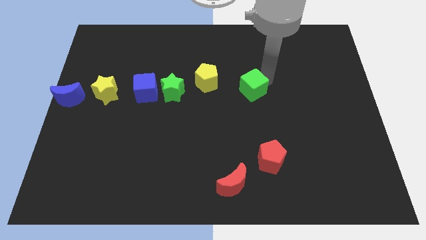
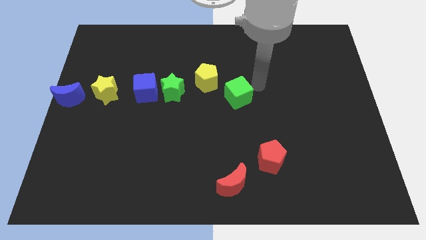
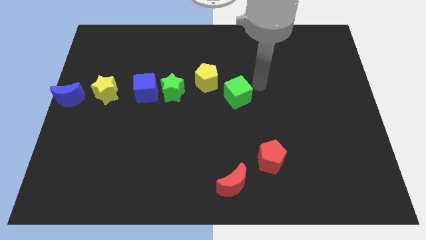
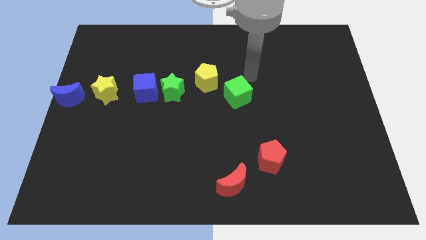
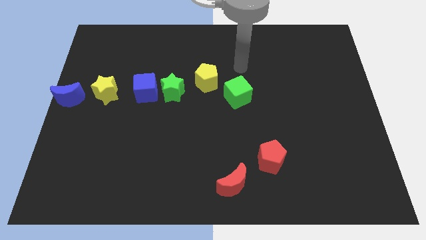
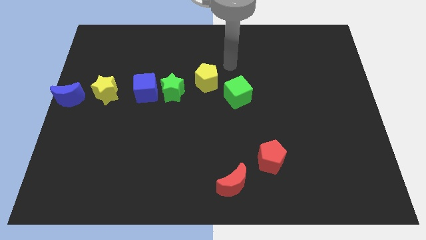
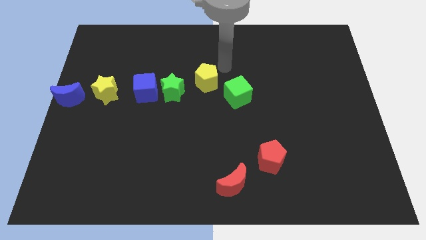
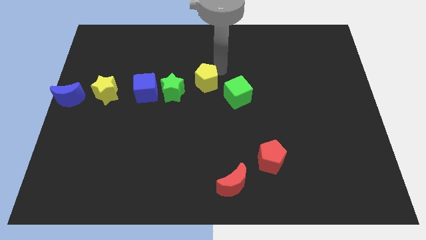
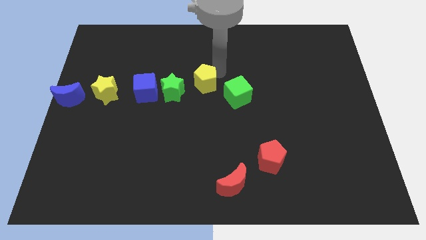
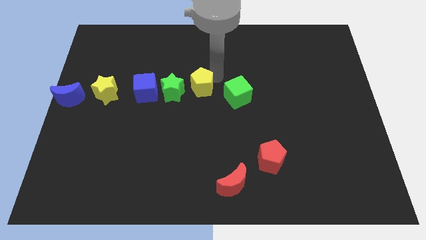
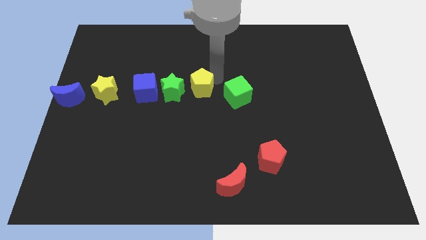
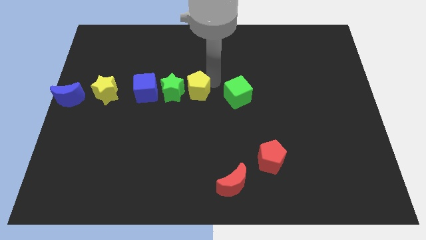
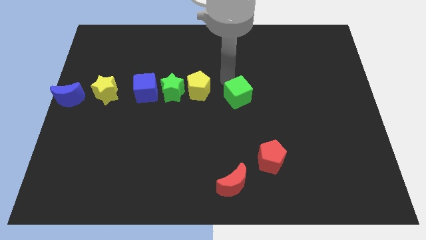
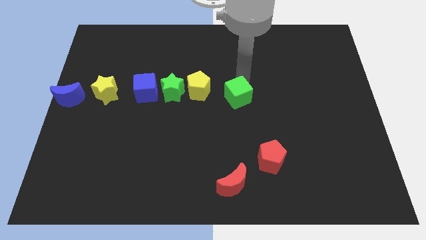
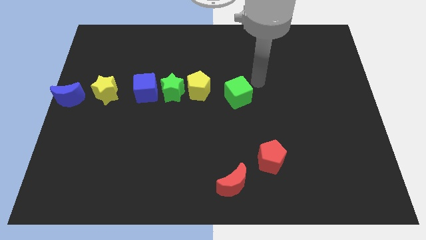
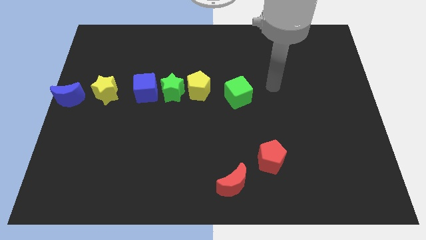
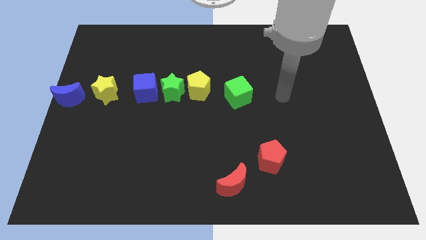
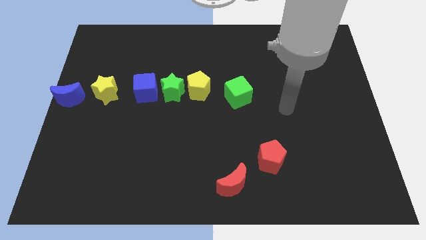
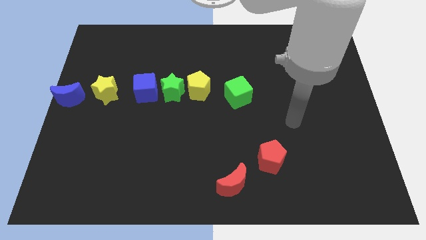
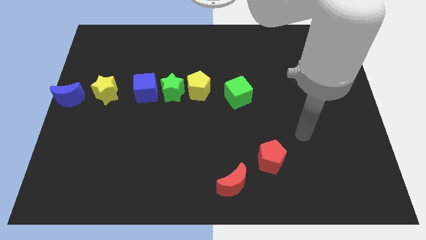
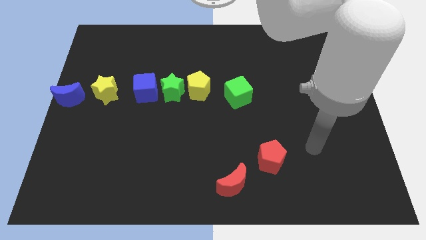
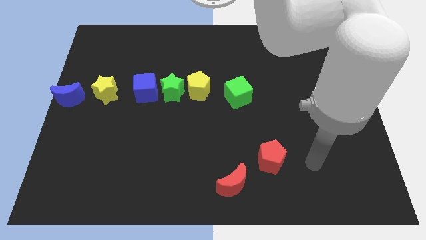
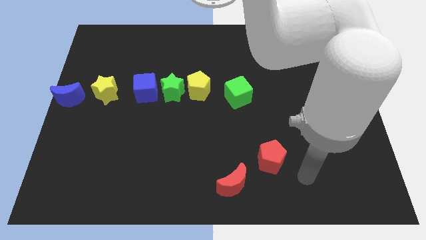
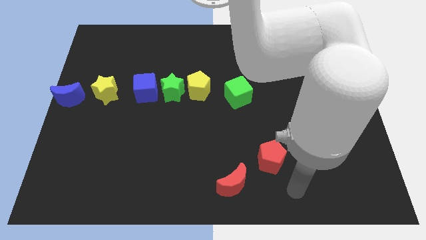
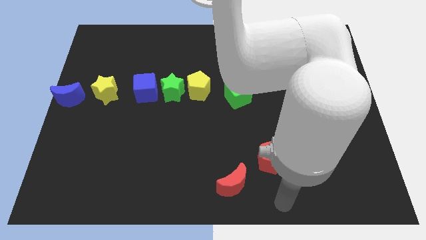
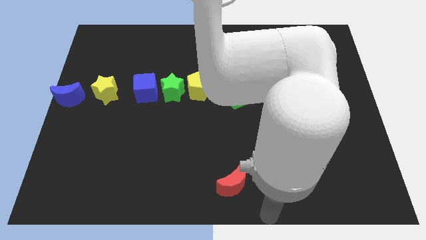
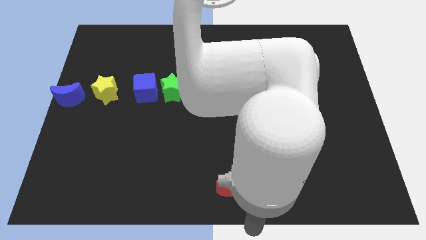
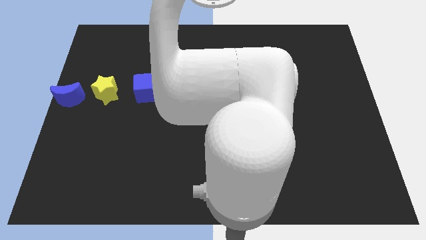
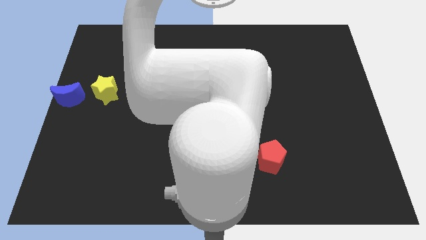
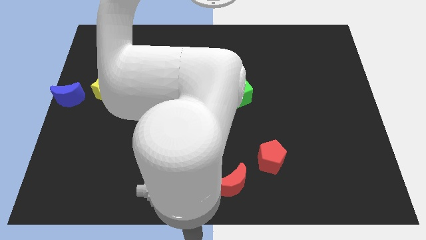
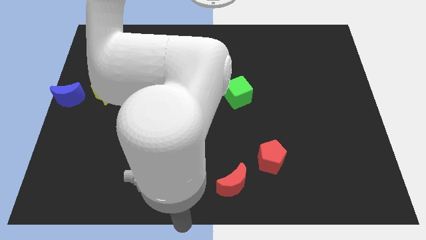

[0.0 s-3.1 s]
place your arm at the bottom center of the board

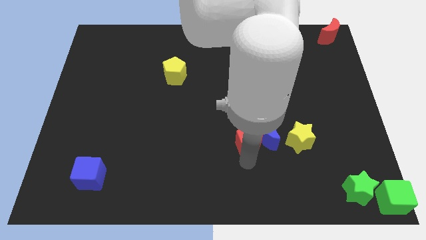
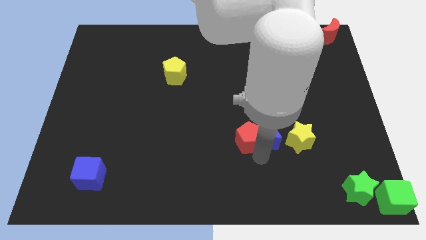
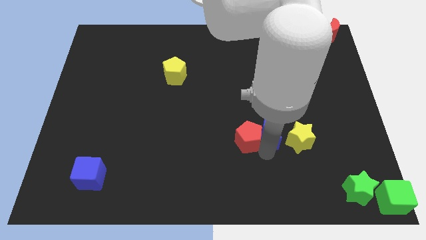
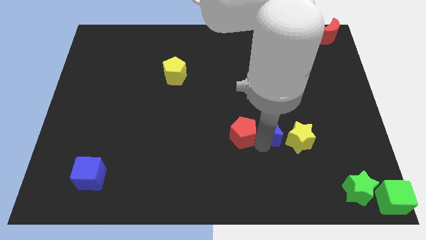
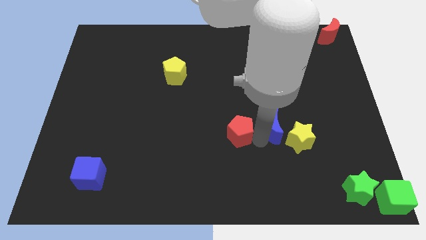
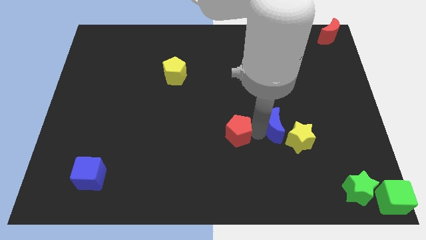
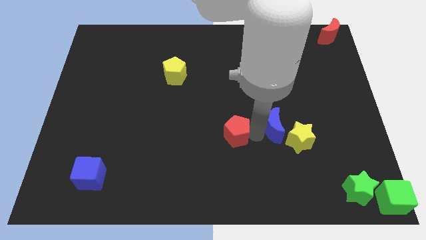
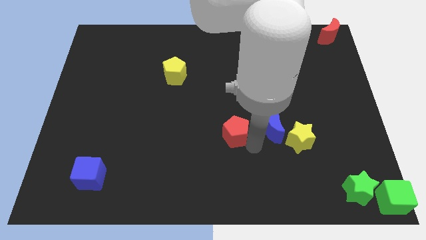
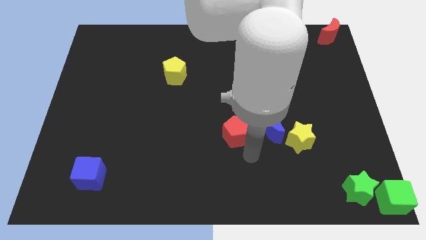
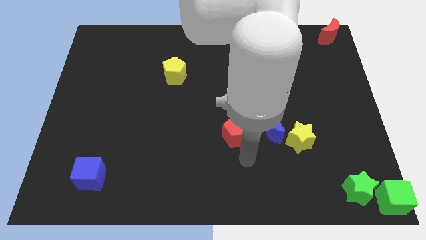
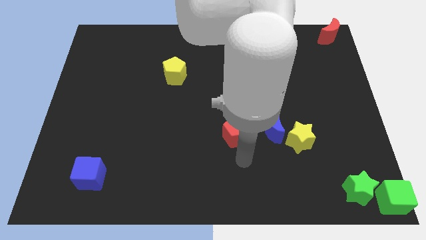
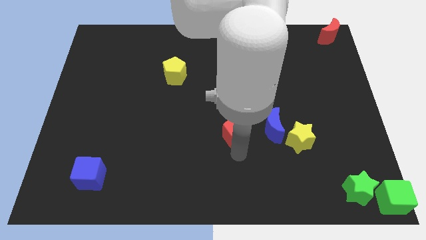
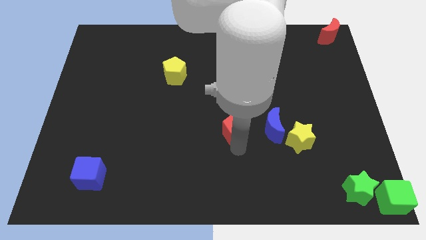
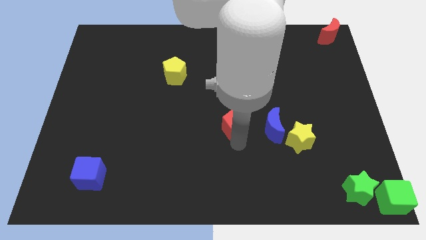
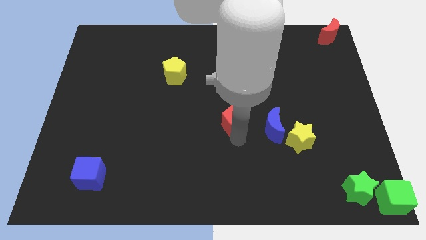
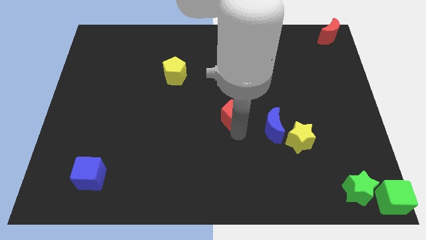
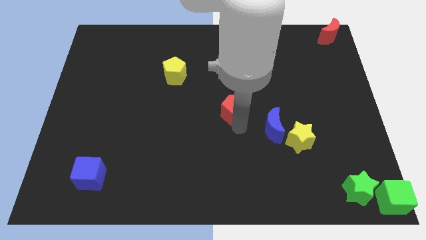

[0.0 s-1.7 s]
separate the red pentagon from the blue crescent

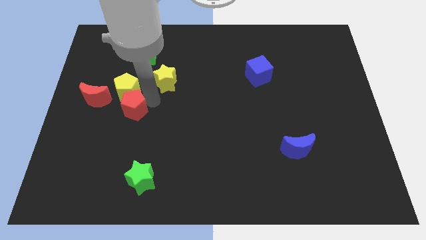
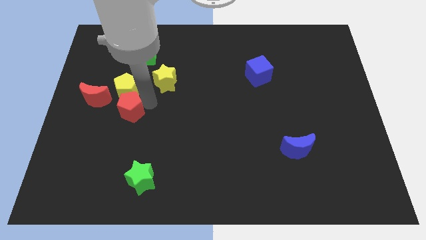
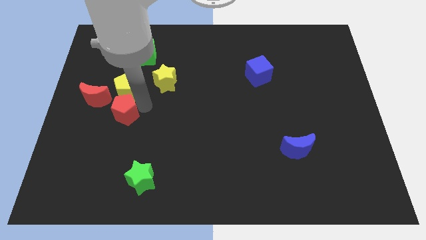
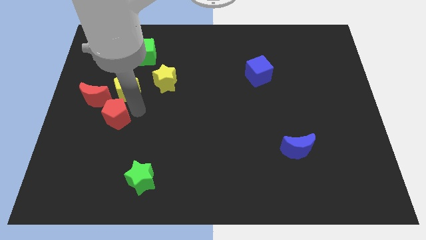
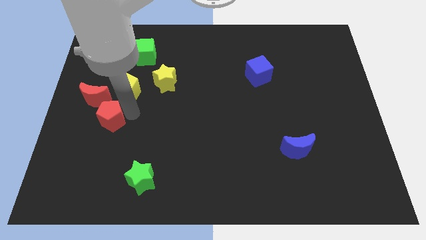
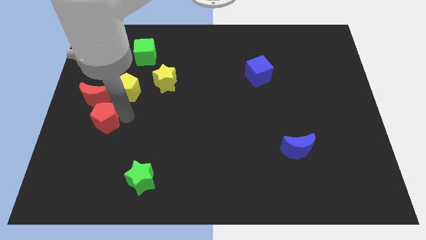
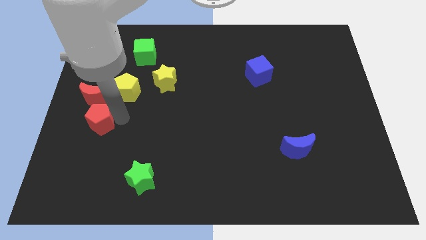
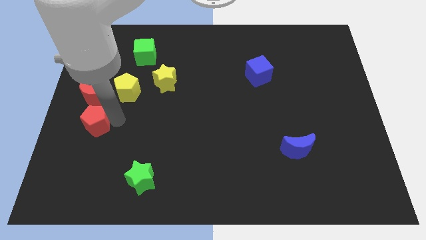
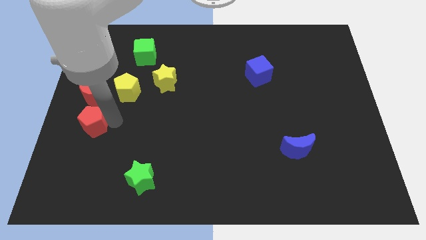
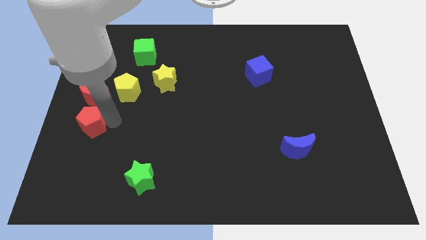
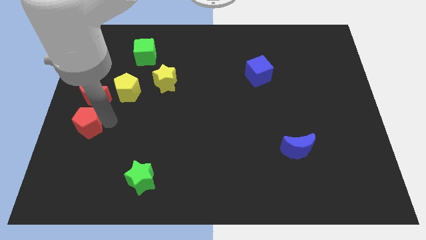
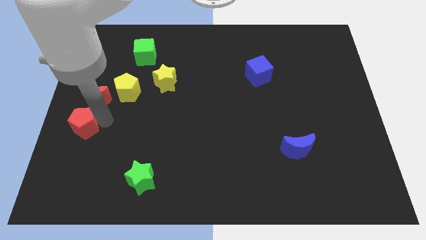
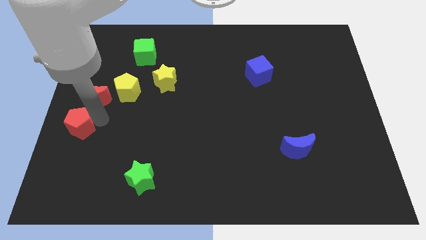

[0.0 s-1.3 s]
put the red pentagon underneath the red crescent

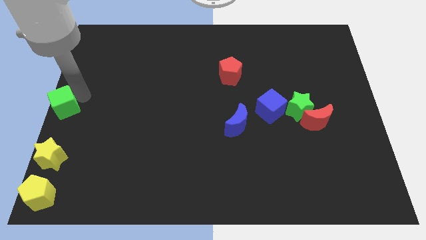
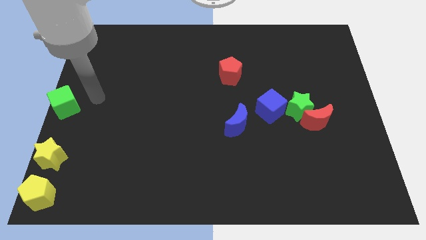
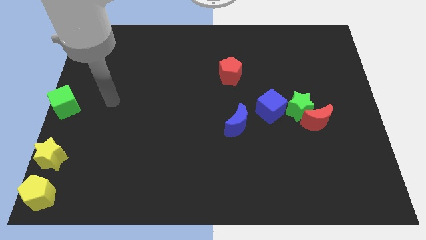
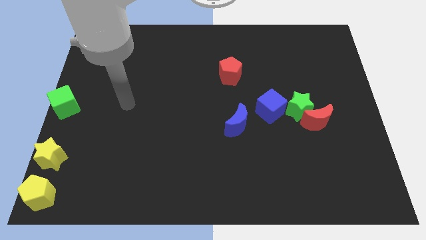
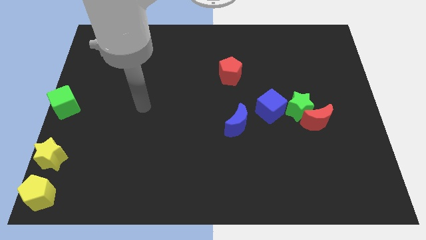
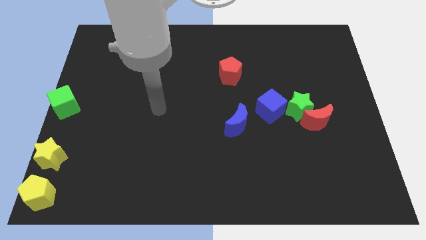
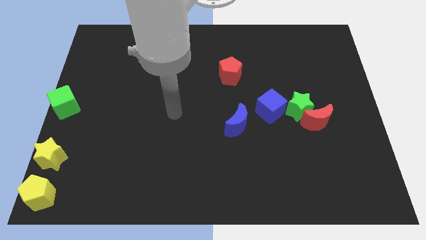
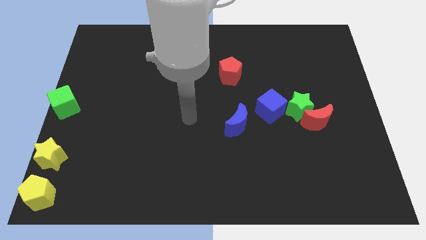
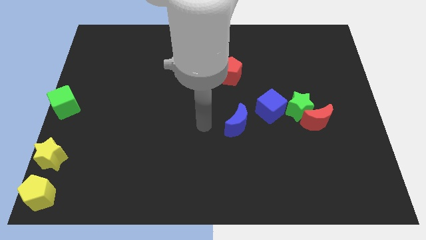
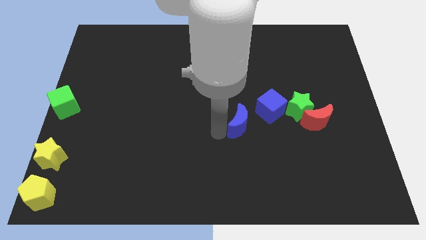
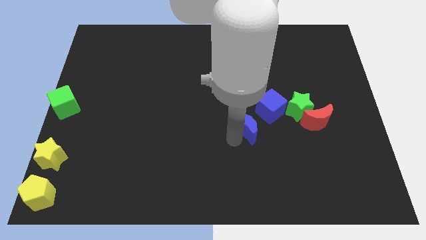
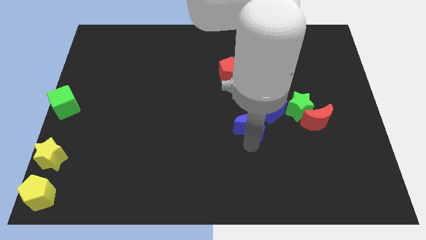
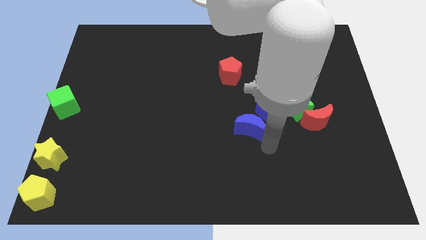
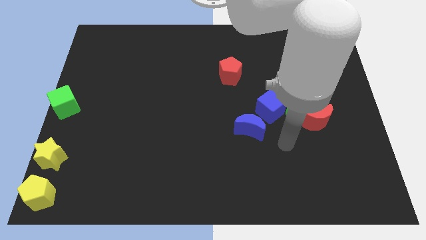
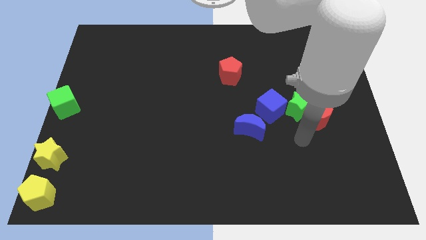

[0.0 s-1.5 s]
move the blue moon to the right side

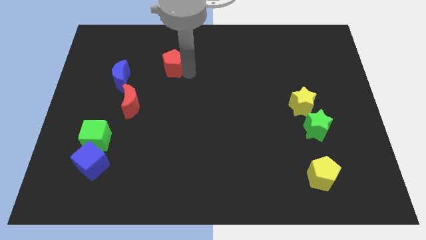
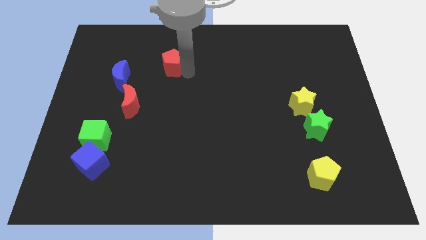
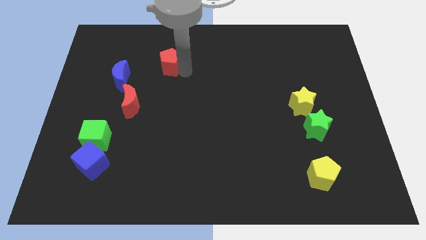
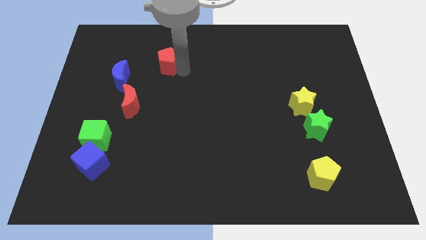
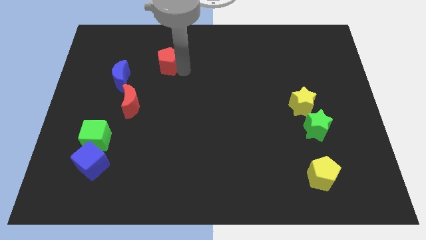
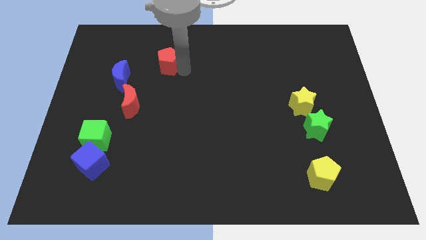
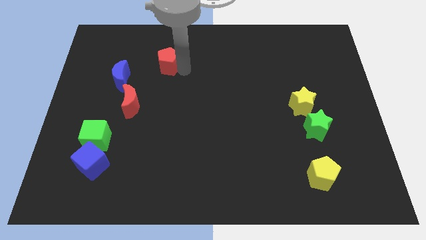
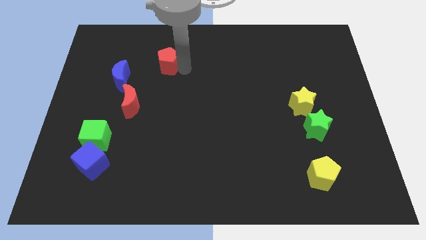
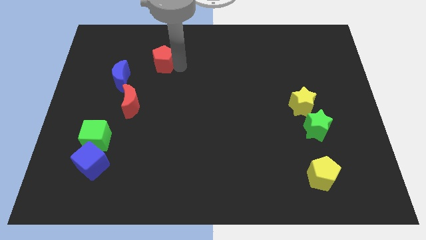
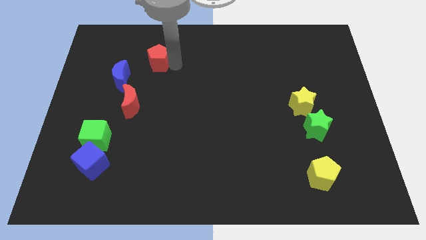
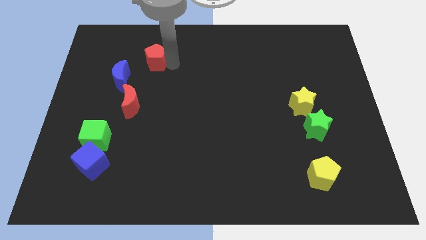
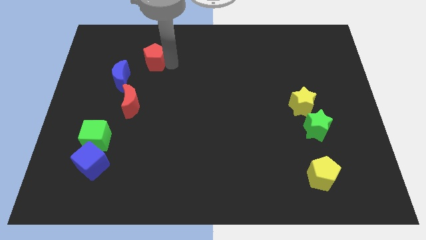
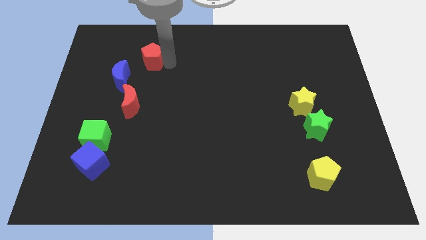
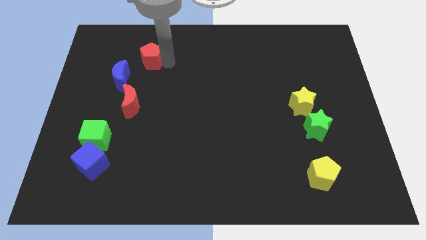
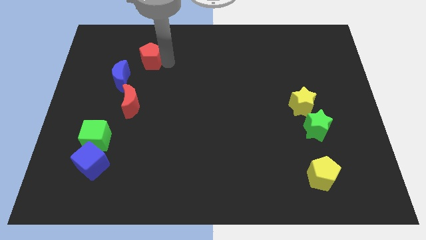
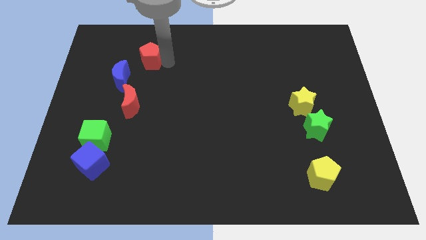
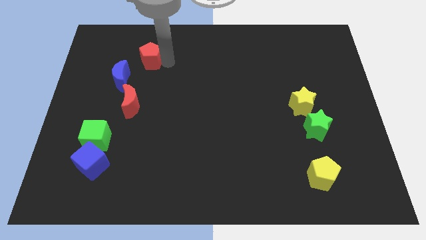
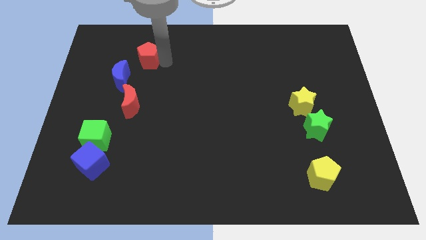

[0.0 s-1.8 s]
place red pentagon to the top right of the blue moon
